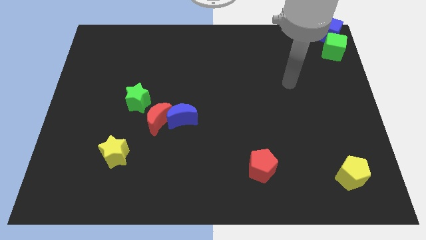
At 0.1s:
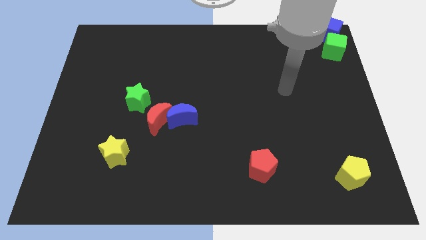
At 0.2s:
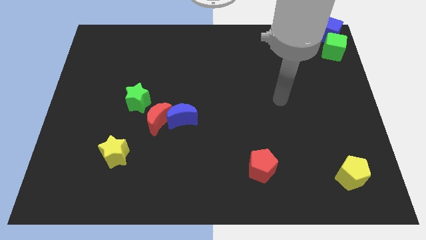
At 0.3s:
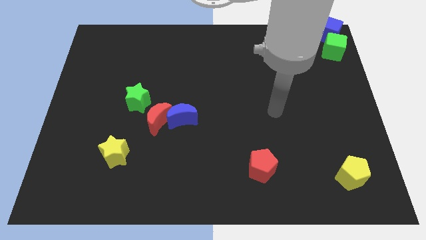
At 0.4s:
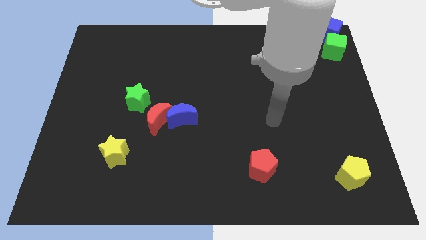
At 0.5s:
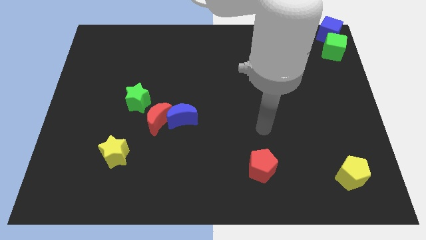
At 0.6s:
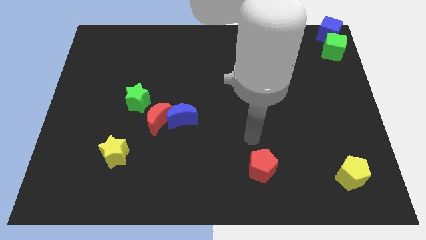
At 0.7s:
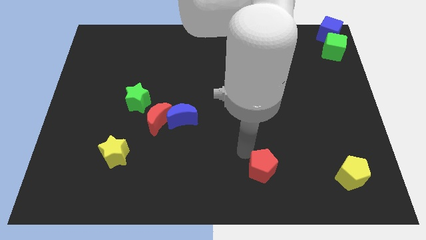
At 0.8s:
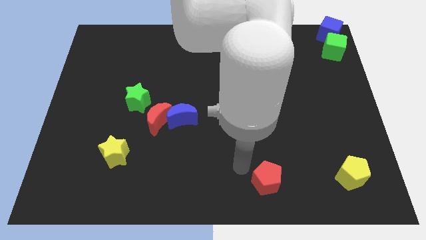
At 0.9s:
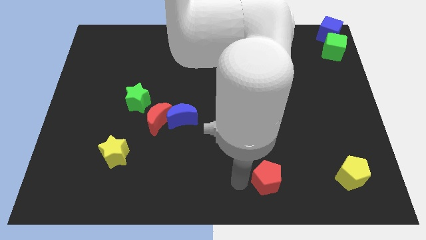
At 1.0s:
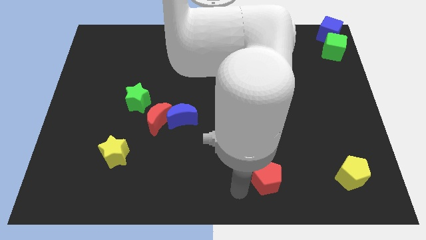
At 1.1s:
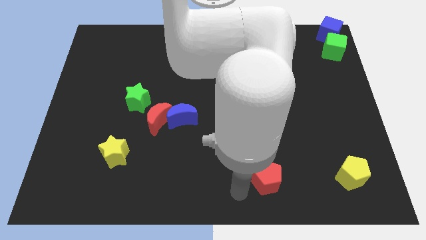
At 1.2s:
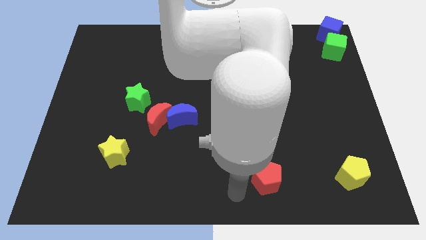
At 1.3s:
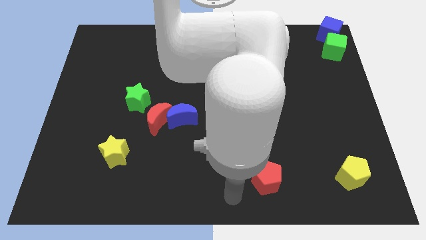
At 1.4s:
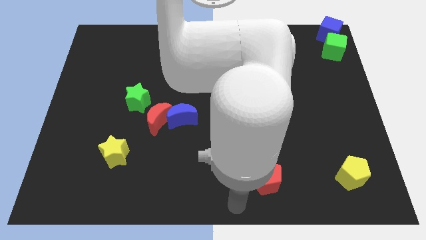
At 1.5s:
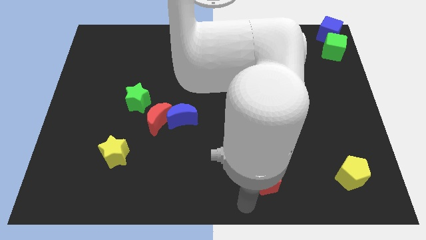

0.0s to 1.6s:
slightly push the red pentagon downwards on the board

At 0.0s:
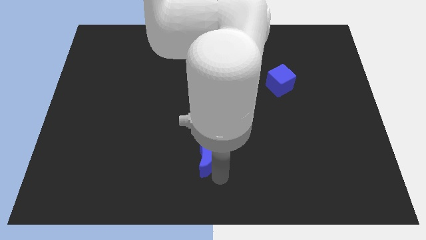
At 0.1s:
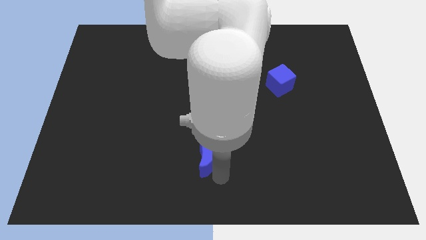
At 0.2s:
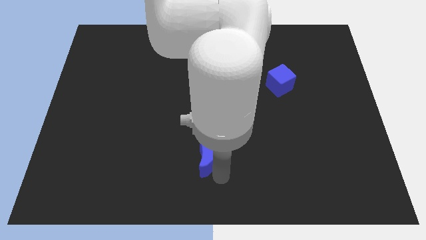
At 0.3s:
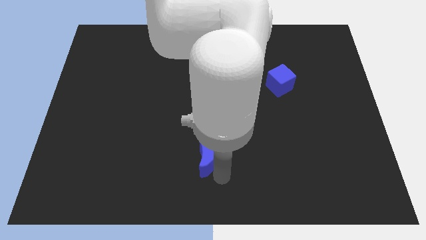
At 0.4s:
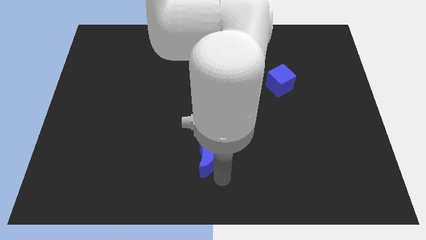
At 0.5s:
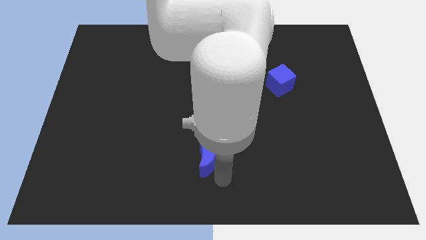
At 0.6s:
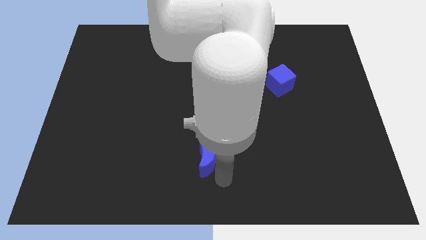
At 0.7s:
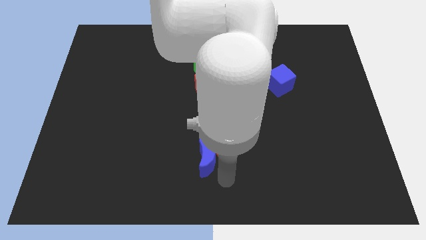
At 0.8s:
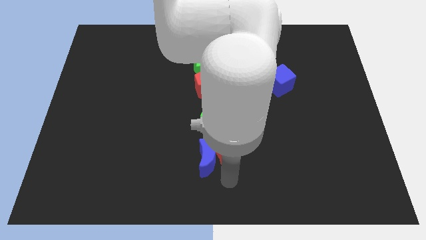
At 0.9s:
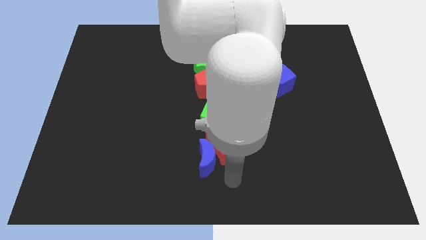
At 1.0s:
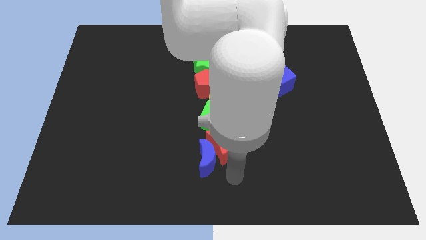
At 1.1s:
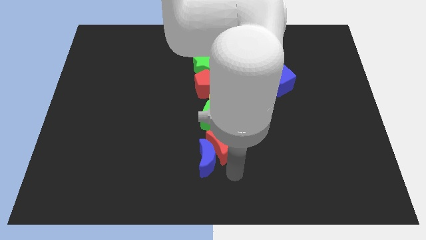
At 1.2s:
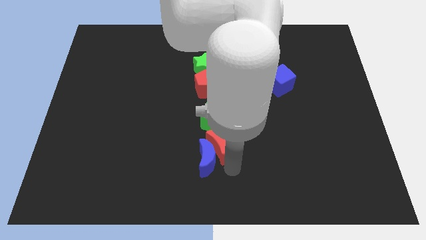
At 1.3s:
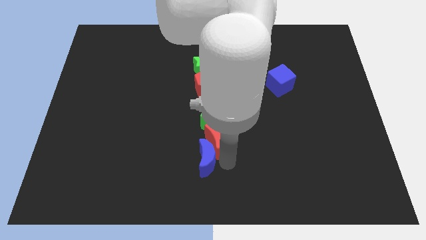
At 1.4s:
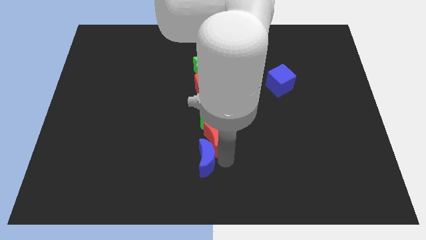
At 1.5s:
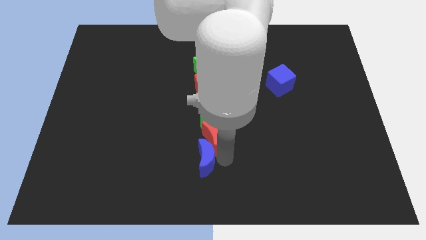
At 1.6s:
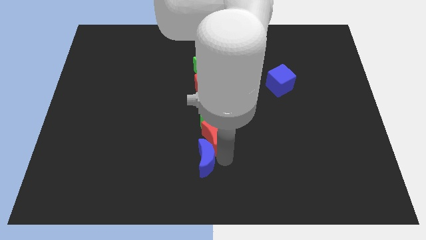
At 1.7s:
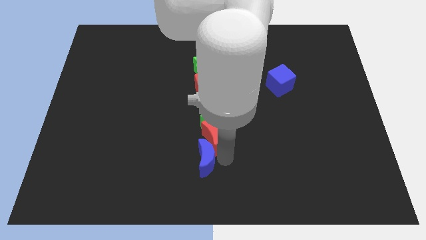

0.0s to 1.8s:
push the red crescent underneath the green cube

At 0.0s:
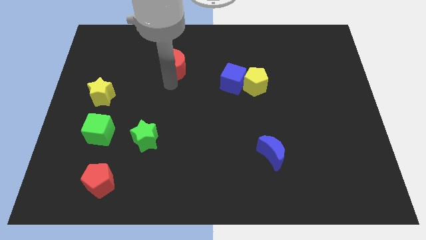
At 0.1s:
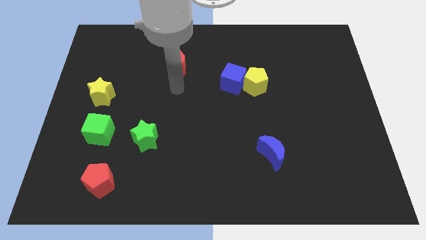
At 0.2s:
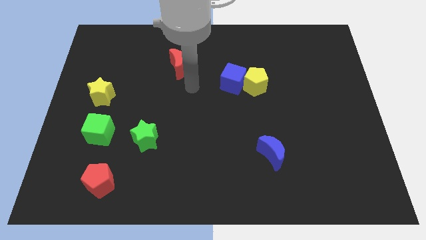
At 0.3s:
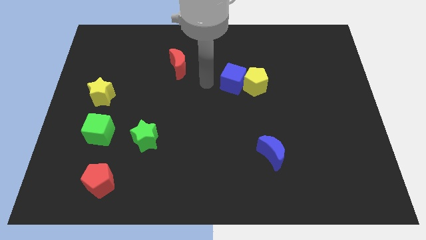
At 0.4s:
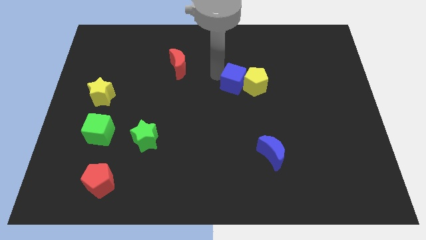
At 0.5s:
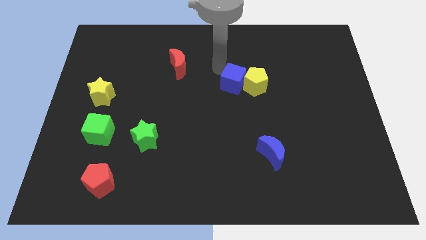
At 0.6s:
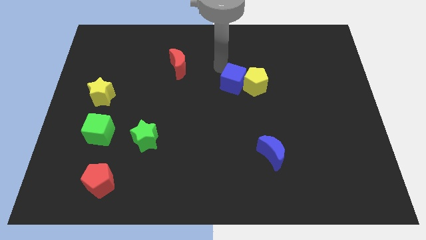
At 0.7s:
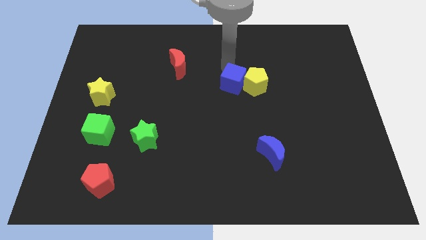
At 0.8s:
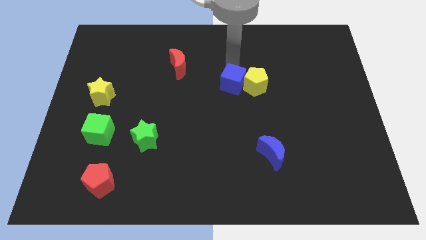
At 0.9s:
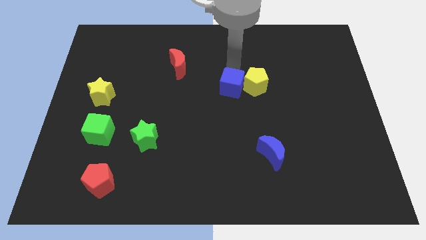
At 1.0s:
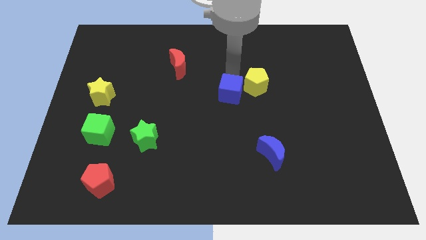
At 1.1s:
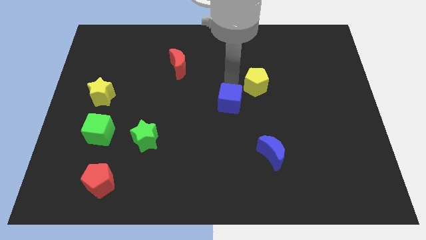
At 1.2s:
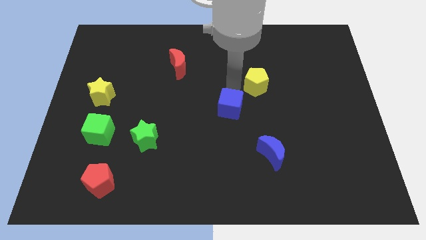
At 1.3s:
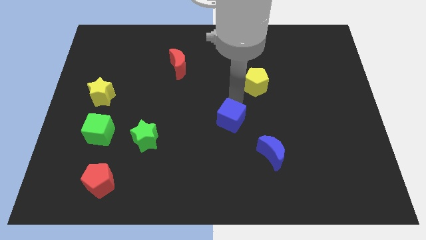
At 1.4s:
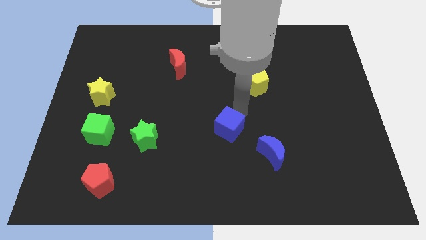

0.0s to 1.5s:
move the blue cube away from the left side of the yellow pentagon

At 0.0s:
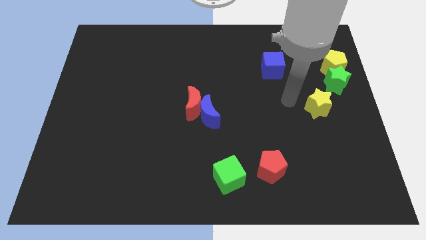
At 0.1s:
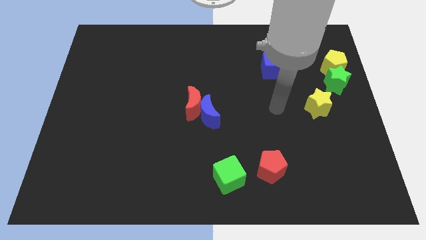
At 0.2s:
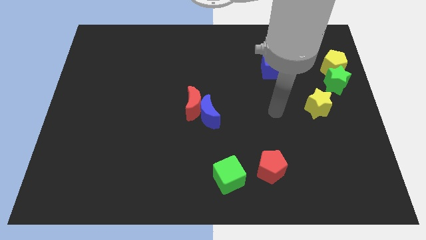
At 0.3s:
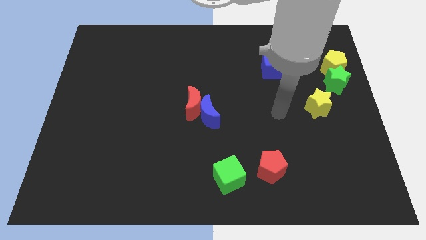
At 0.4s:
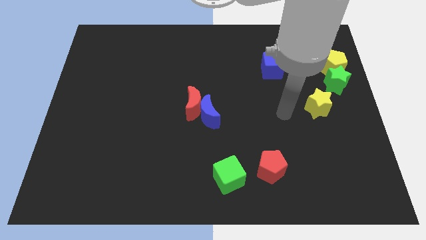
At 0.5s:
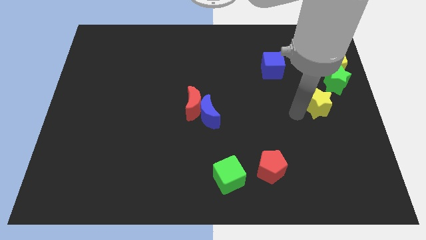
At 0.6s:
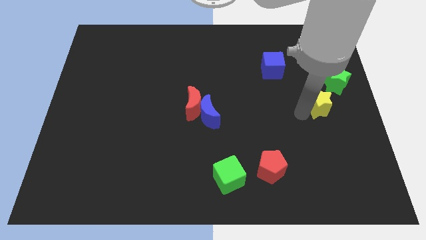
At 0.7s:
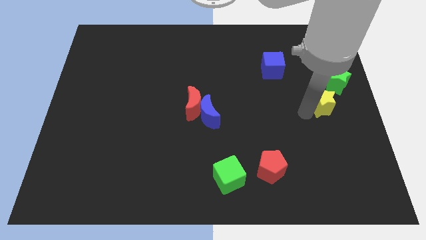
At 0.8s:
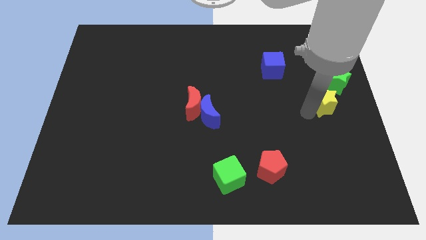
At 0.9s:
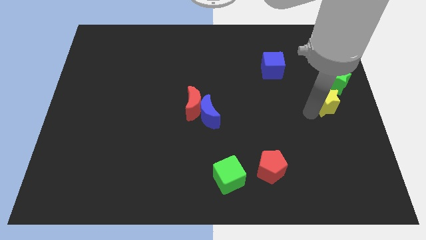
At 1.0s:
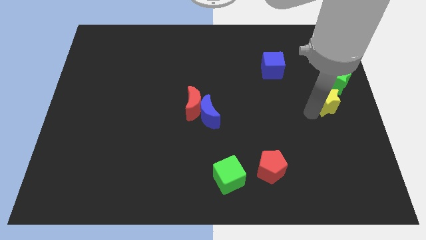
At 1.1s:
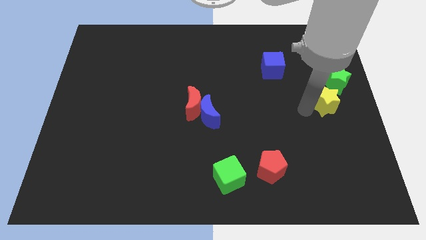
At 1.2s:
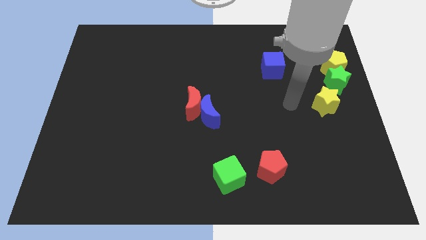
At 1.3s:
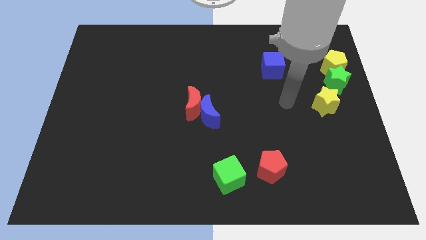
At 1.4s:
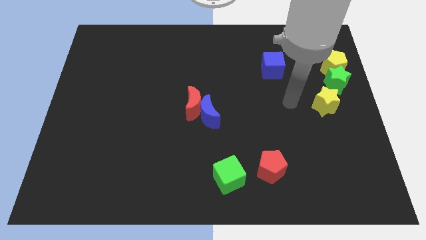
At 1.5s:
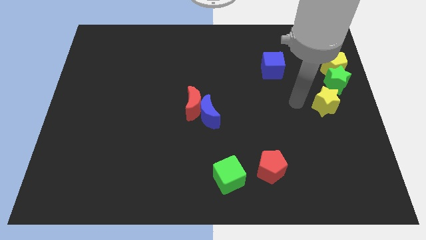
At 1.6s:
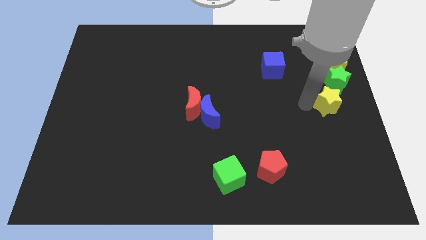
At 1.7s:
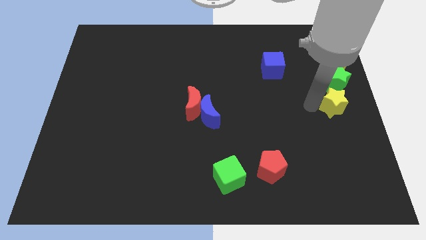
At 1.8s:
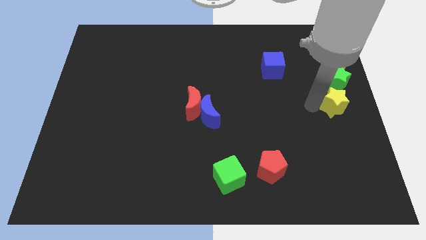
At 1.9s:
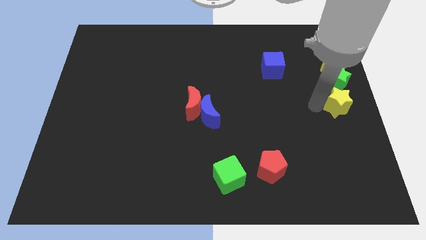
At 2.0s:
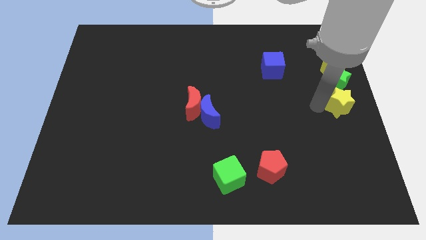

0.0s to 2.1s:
place the yellow star below the green star

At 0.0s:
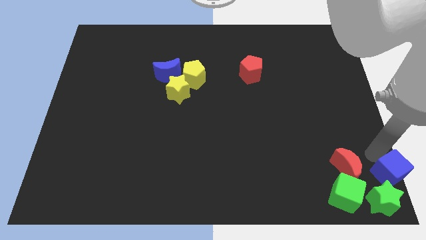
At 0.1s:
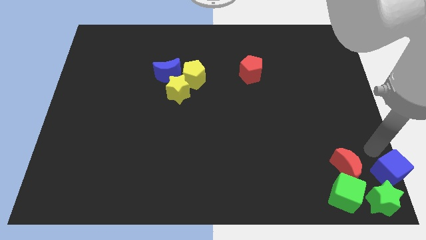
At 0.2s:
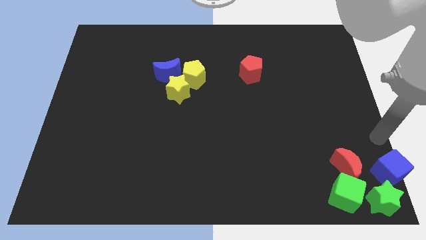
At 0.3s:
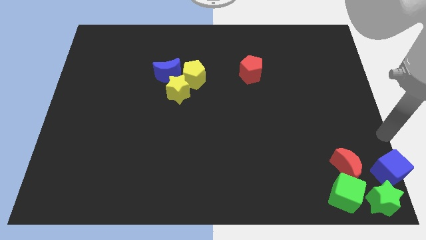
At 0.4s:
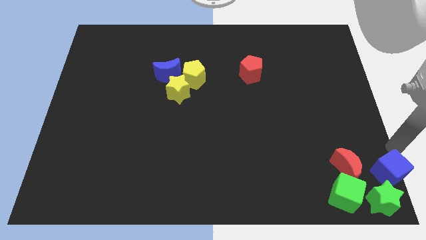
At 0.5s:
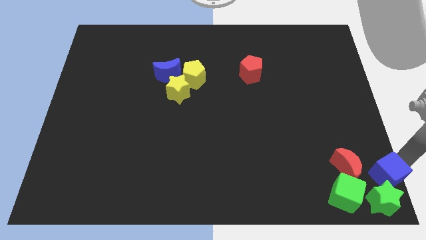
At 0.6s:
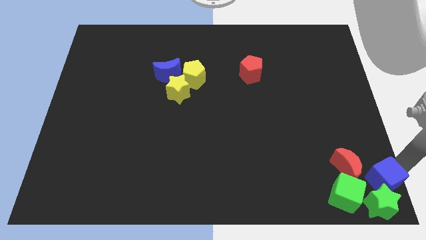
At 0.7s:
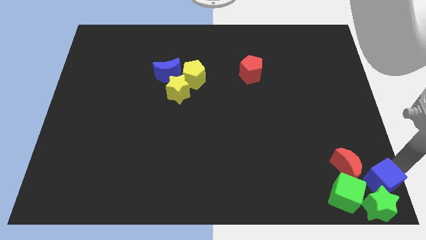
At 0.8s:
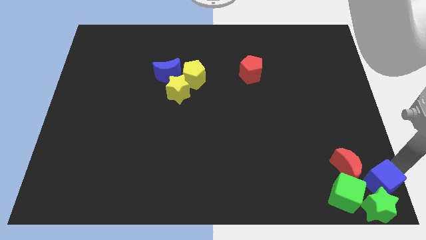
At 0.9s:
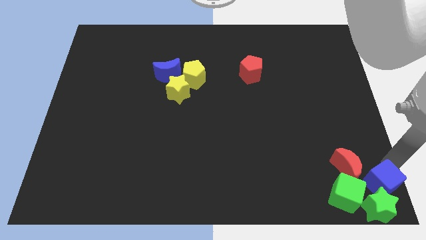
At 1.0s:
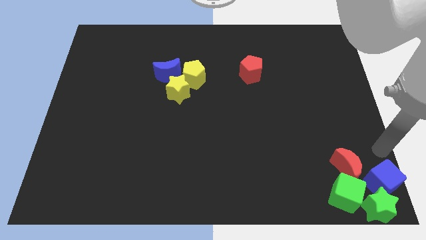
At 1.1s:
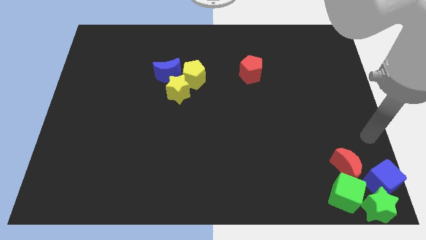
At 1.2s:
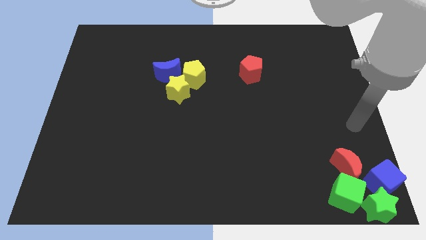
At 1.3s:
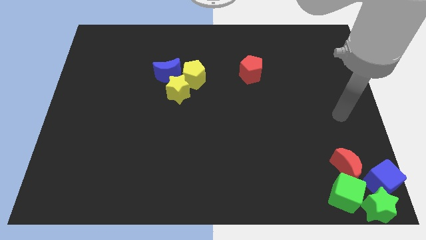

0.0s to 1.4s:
push the blue cube into the green star

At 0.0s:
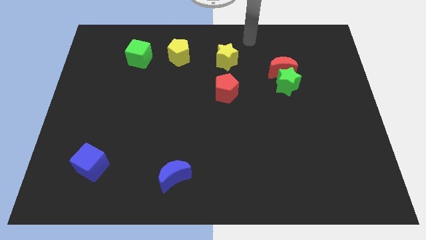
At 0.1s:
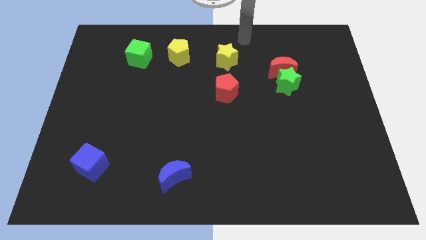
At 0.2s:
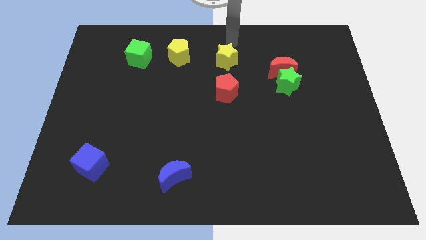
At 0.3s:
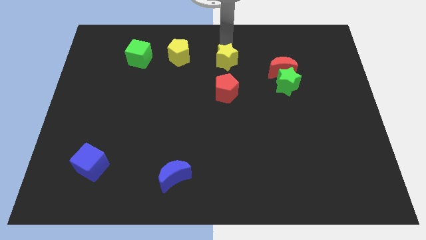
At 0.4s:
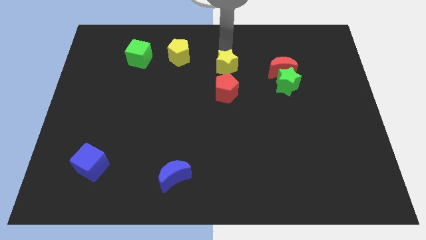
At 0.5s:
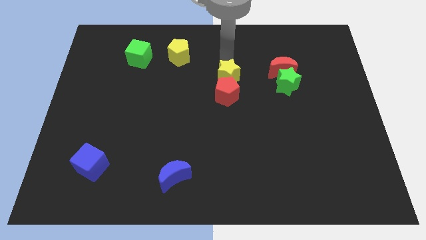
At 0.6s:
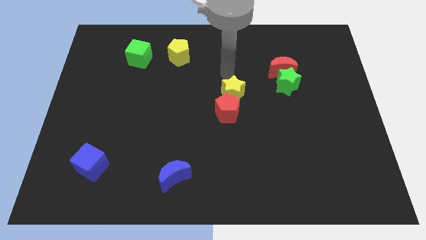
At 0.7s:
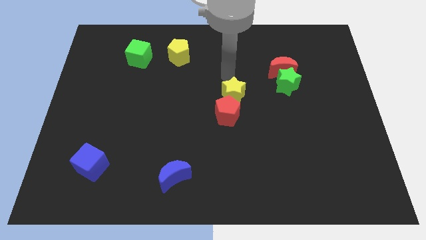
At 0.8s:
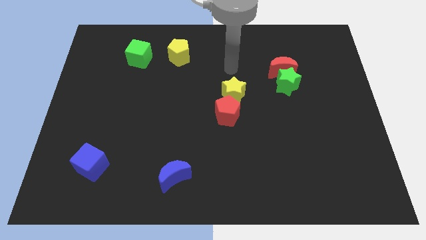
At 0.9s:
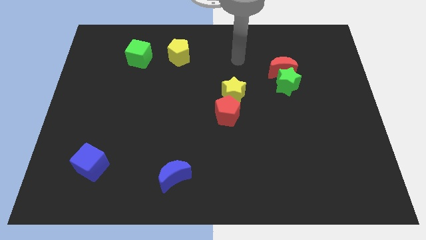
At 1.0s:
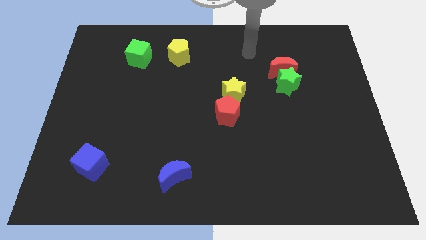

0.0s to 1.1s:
push the yellow star into the red pentagon
